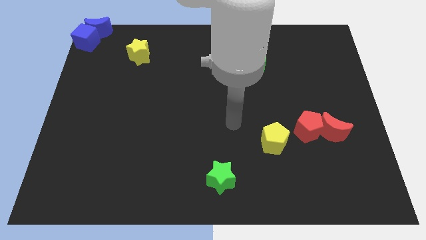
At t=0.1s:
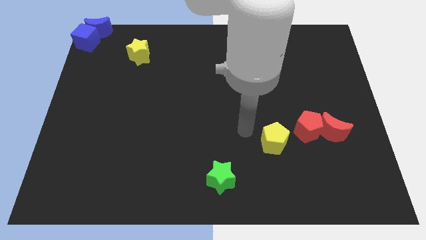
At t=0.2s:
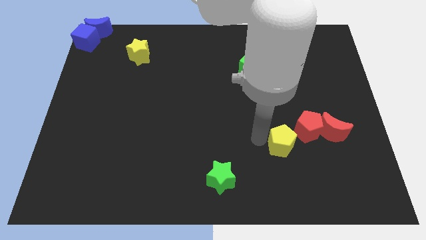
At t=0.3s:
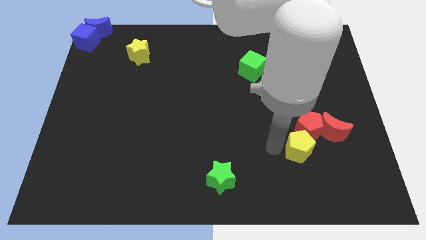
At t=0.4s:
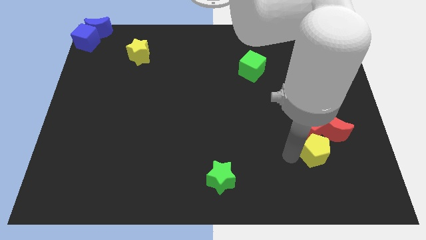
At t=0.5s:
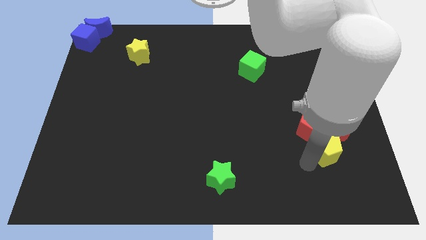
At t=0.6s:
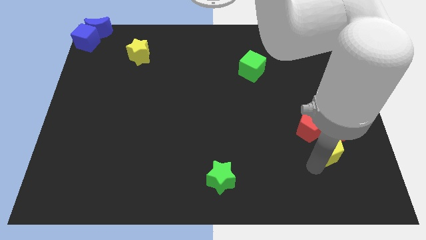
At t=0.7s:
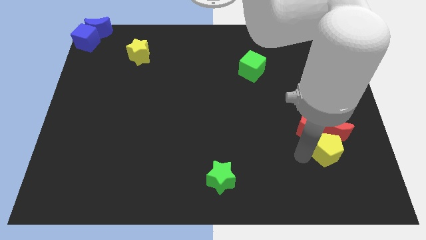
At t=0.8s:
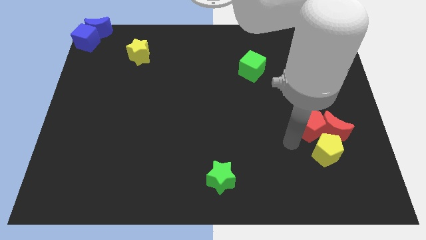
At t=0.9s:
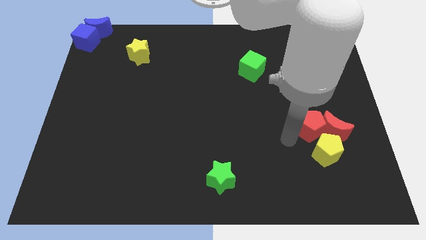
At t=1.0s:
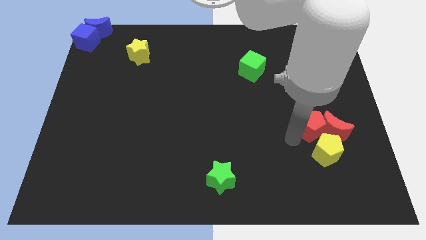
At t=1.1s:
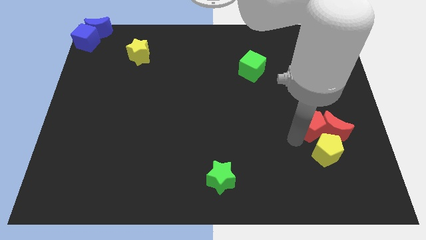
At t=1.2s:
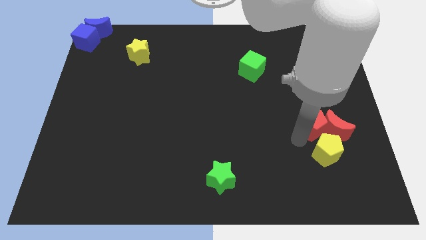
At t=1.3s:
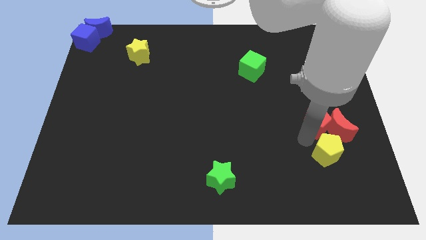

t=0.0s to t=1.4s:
push the yellow pentagon to the bottom of the red crescent and red pentagon

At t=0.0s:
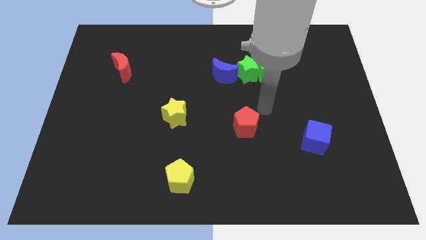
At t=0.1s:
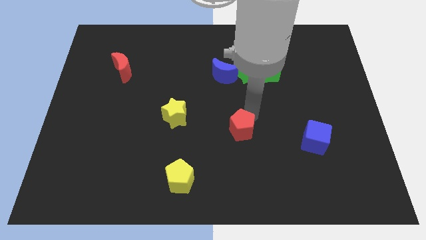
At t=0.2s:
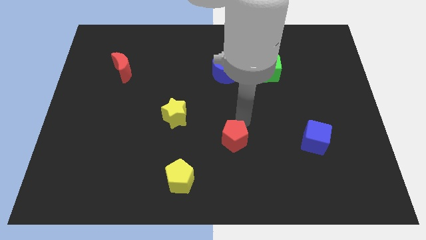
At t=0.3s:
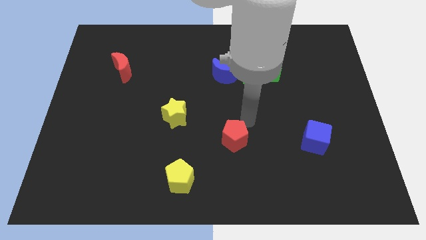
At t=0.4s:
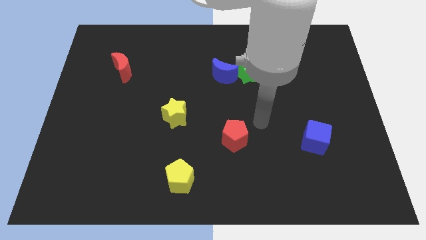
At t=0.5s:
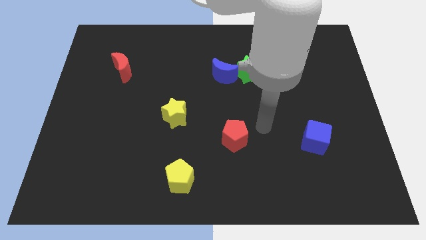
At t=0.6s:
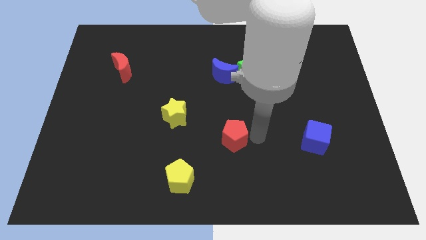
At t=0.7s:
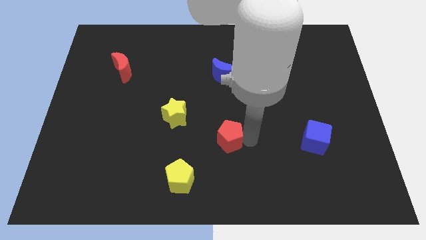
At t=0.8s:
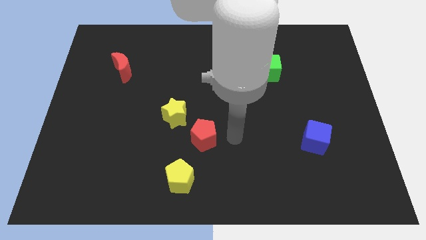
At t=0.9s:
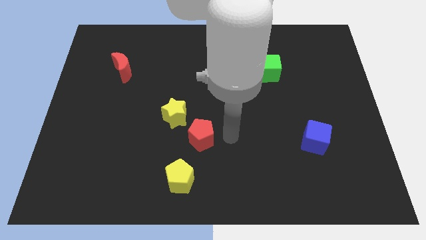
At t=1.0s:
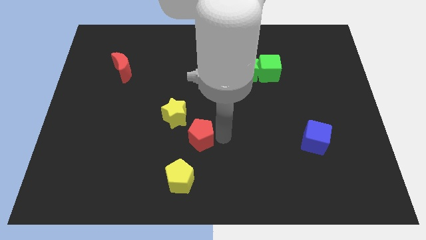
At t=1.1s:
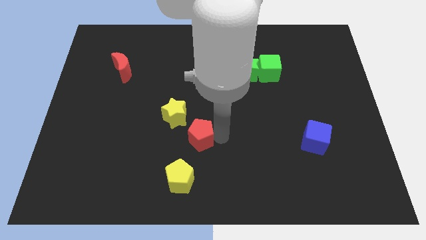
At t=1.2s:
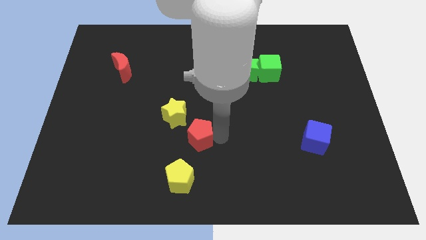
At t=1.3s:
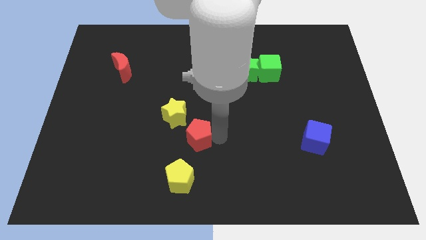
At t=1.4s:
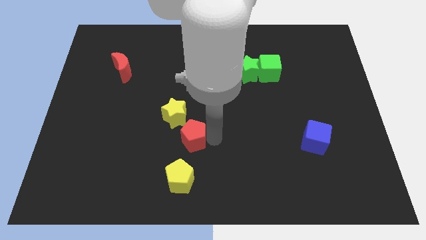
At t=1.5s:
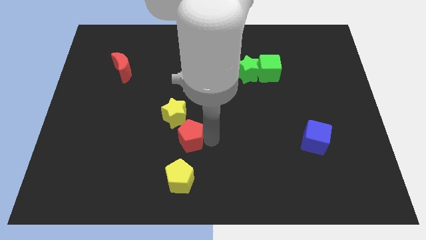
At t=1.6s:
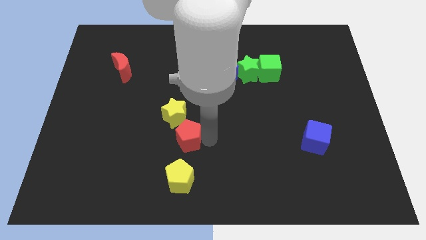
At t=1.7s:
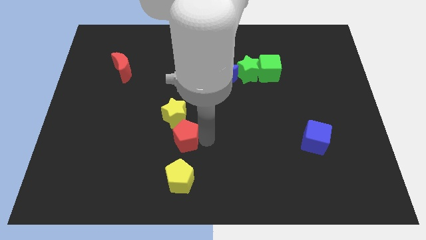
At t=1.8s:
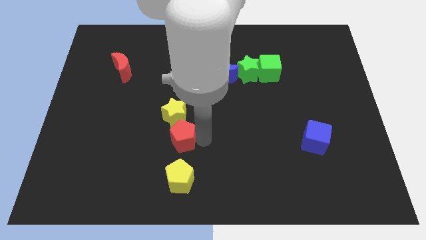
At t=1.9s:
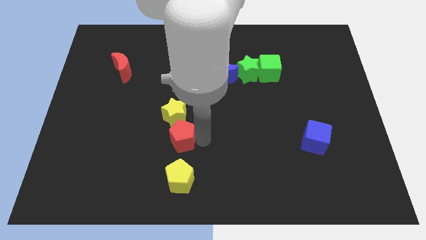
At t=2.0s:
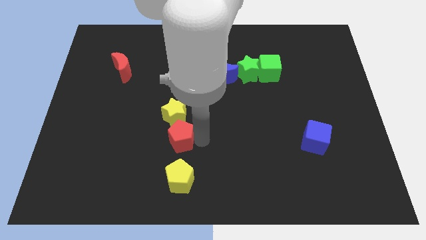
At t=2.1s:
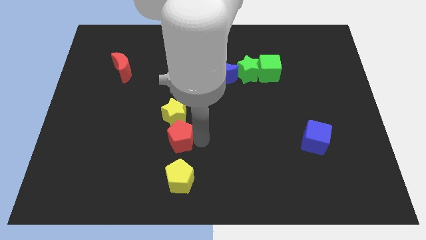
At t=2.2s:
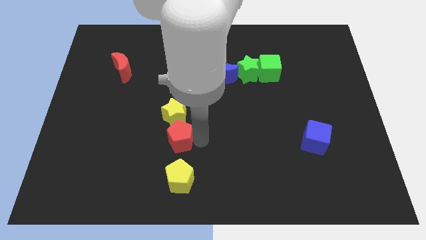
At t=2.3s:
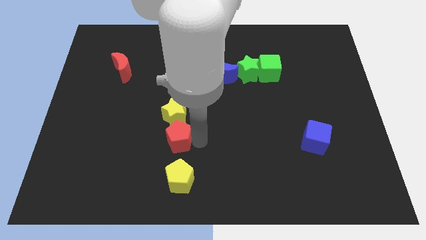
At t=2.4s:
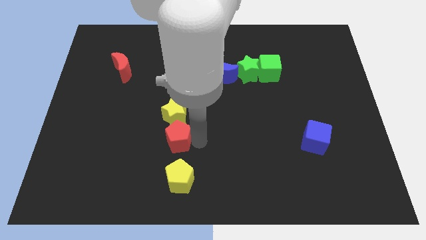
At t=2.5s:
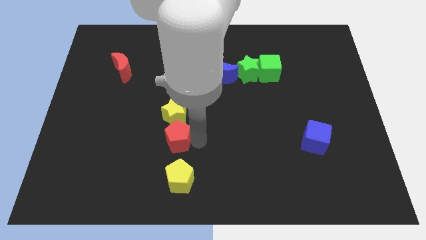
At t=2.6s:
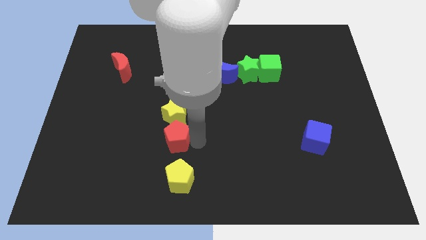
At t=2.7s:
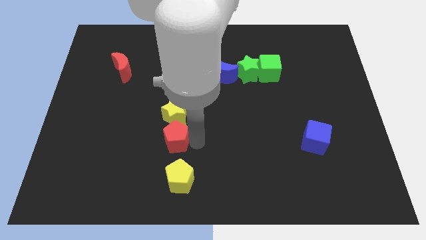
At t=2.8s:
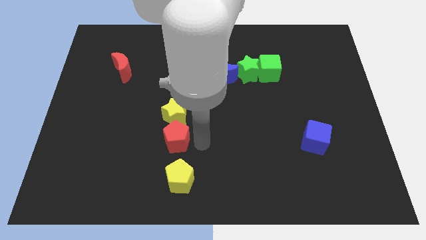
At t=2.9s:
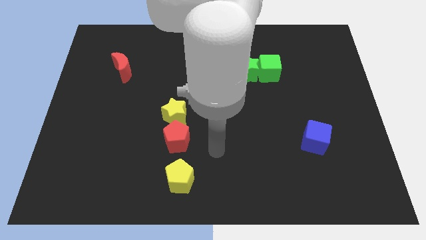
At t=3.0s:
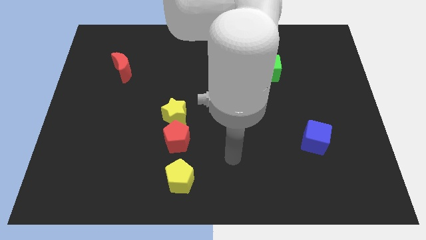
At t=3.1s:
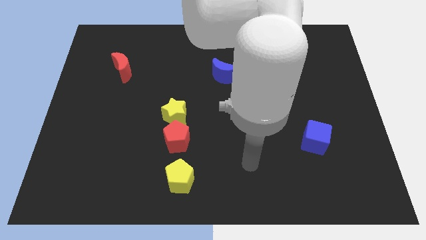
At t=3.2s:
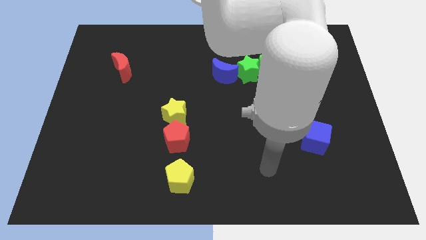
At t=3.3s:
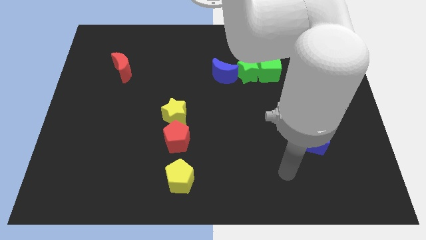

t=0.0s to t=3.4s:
place red pentagon in between yellow blocks

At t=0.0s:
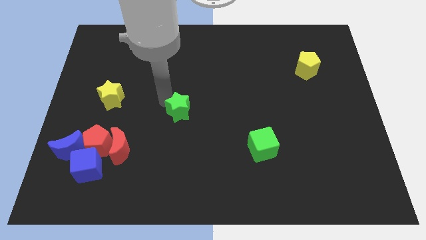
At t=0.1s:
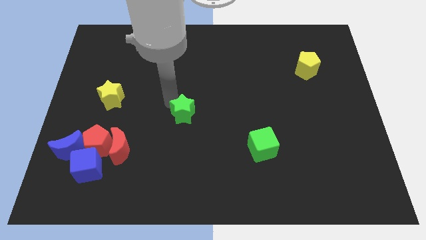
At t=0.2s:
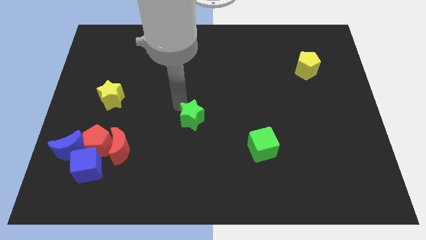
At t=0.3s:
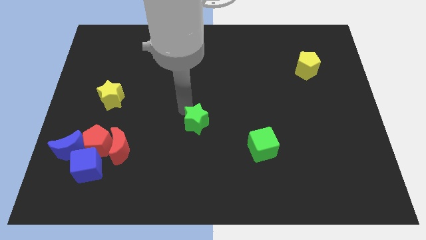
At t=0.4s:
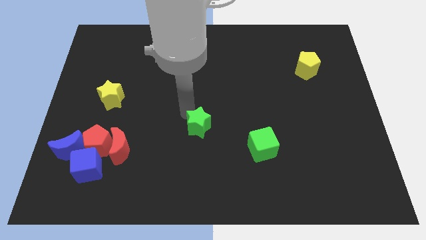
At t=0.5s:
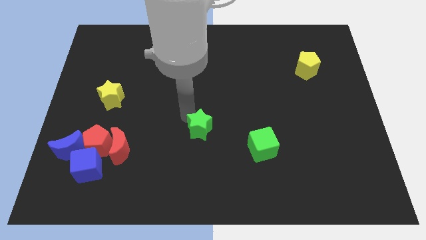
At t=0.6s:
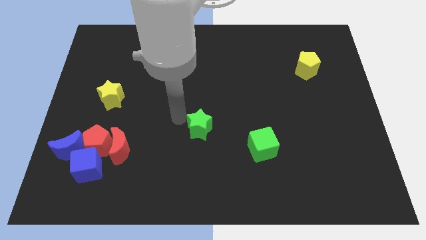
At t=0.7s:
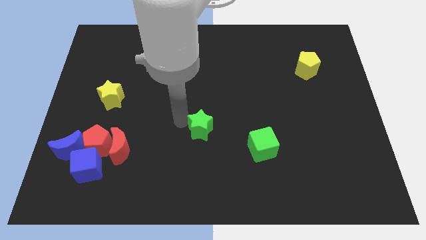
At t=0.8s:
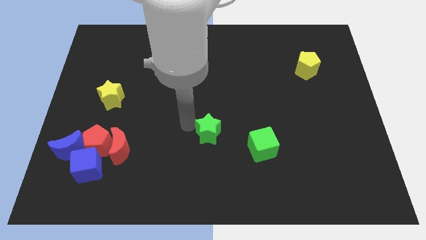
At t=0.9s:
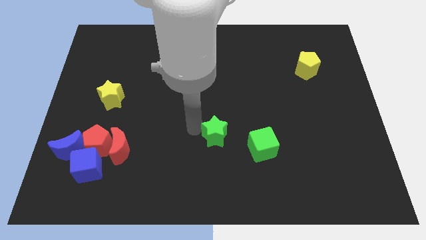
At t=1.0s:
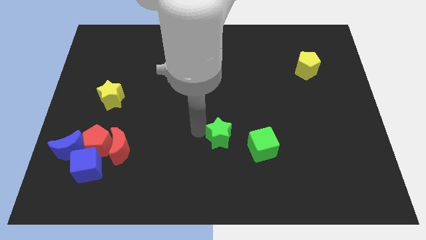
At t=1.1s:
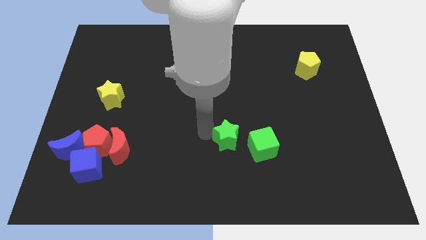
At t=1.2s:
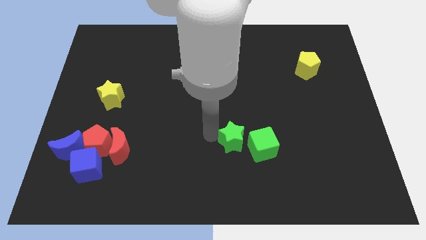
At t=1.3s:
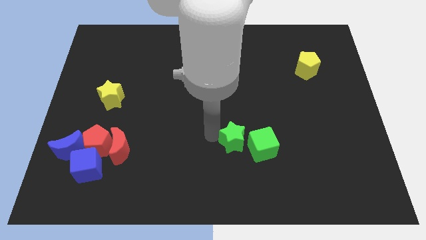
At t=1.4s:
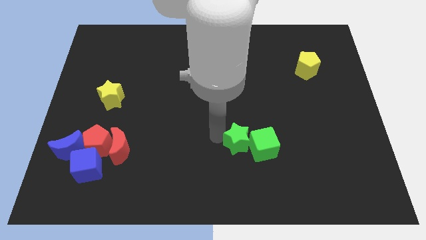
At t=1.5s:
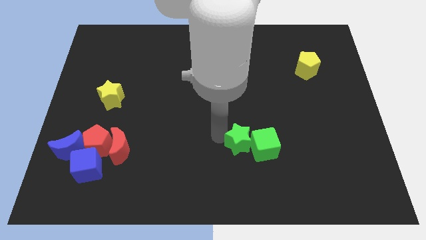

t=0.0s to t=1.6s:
push the green star to the top left to the green cube

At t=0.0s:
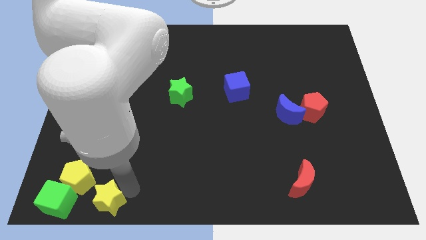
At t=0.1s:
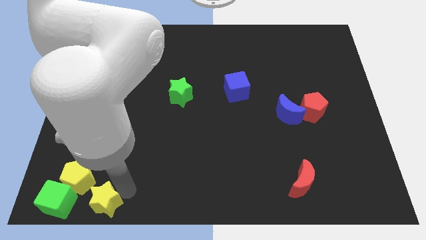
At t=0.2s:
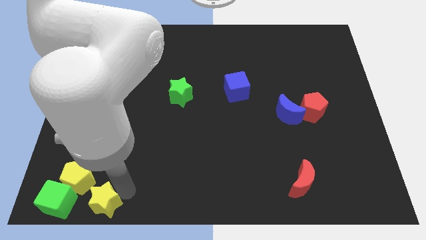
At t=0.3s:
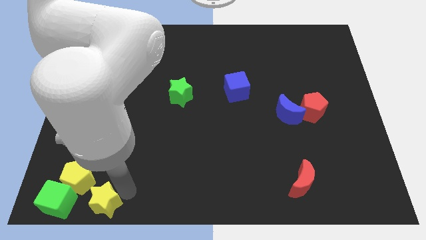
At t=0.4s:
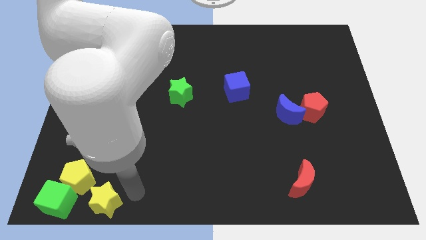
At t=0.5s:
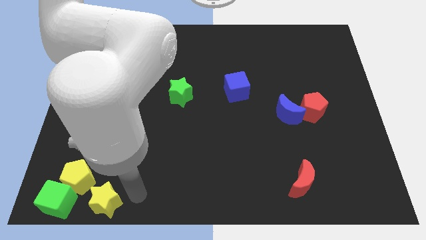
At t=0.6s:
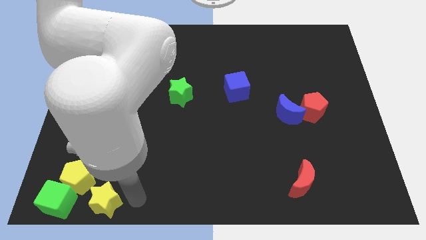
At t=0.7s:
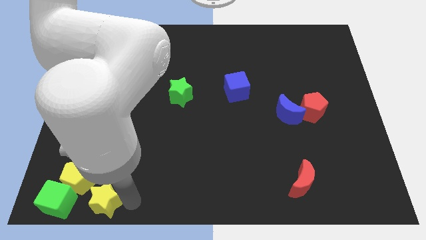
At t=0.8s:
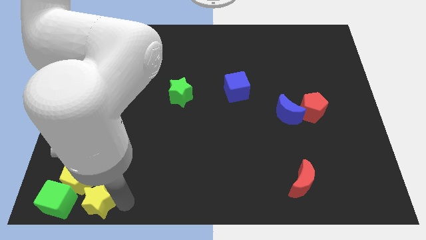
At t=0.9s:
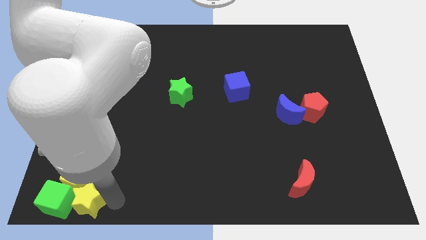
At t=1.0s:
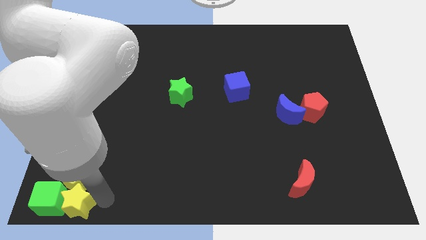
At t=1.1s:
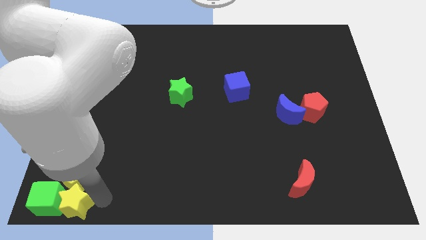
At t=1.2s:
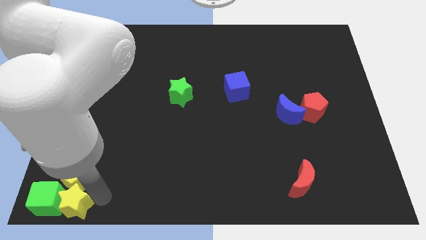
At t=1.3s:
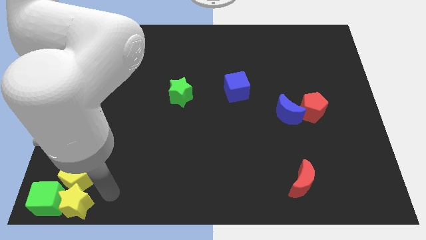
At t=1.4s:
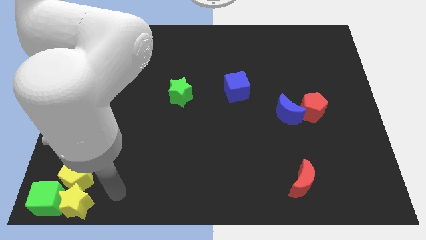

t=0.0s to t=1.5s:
move the yellow star to the right of the green cube

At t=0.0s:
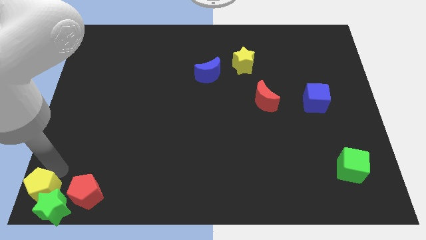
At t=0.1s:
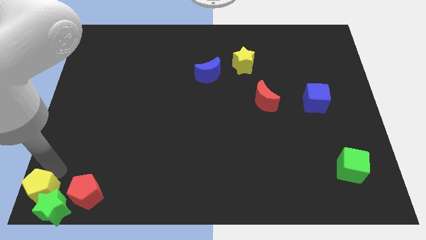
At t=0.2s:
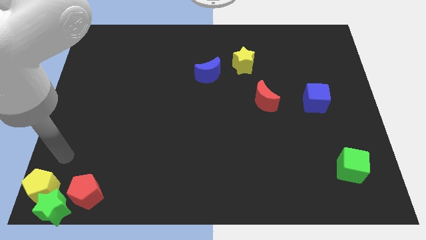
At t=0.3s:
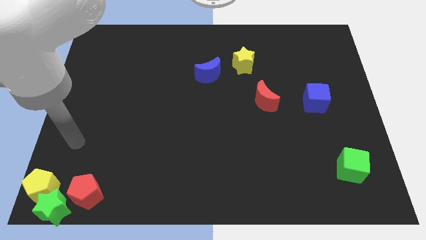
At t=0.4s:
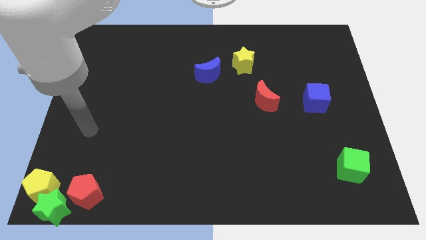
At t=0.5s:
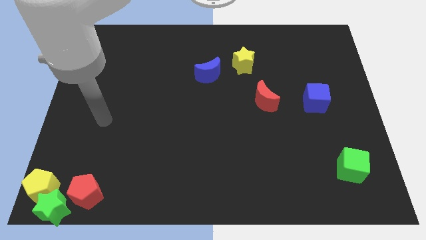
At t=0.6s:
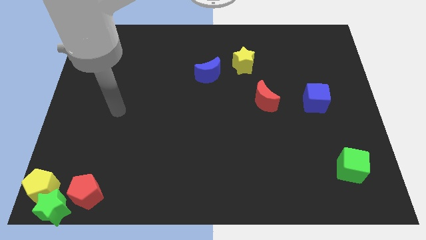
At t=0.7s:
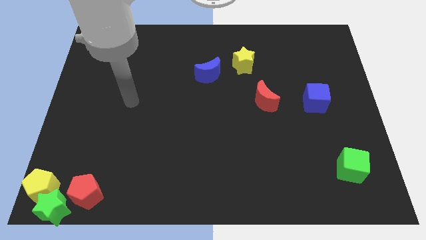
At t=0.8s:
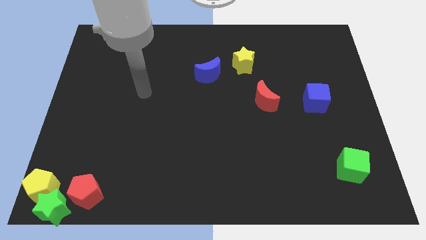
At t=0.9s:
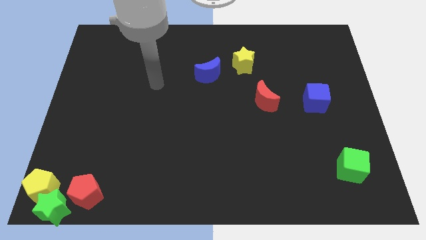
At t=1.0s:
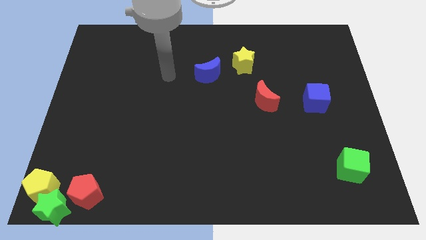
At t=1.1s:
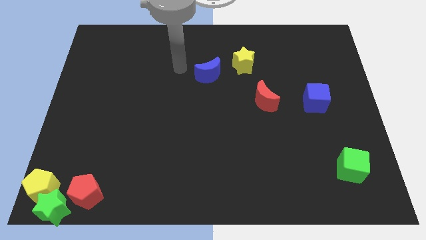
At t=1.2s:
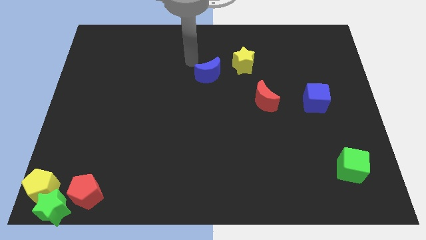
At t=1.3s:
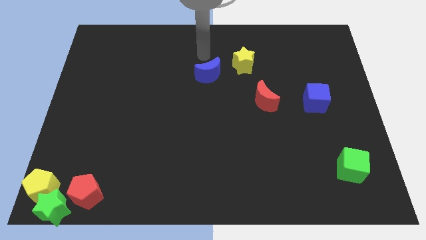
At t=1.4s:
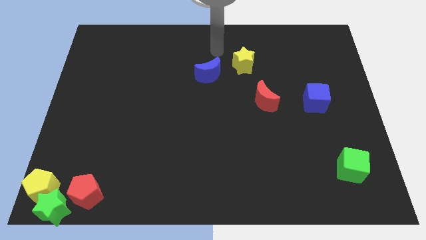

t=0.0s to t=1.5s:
move the arm away from the yellow pentagon
